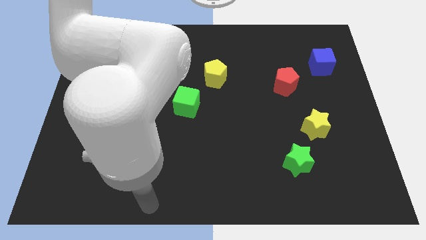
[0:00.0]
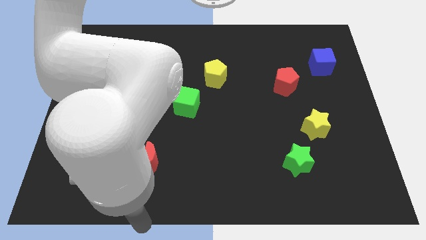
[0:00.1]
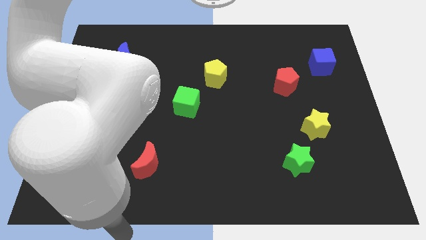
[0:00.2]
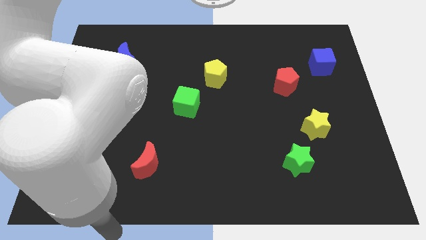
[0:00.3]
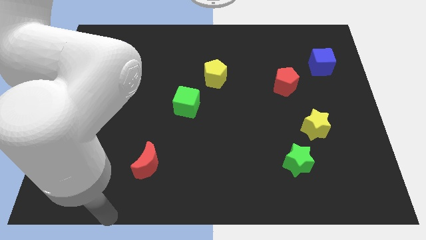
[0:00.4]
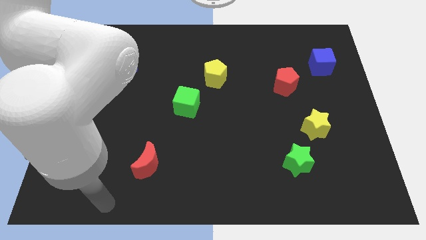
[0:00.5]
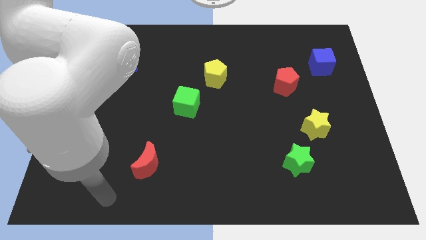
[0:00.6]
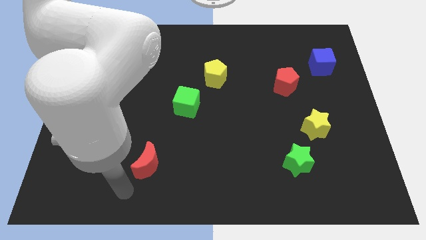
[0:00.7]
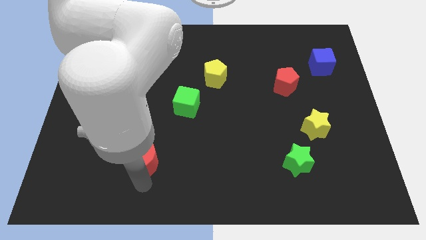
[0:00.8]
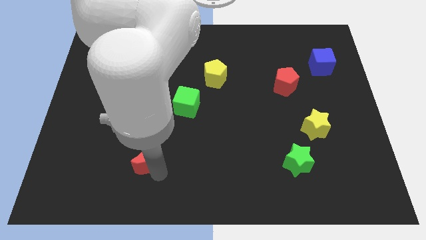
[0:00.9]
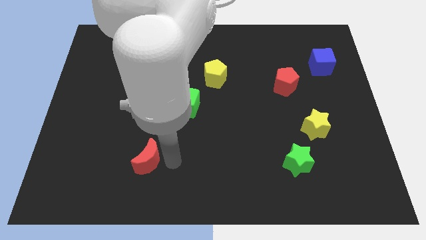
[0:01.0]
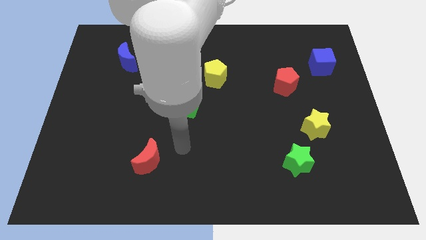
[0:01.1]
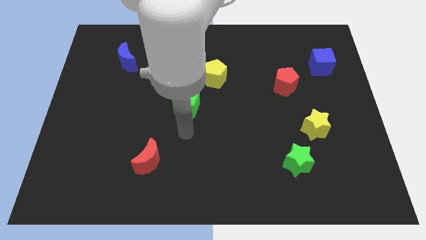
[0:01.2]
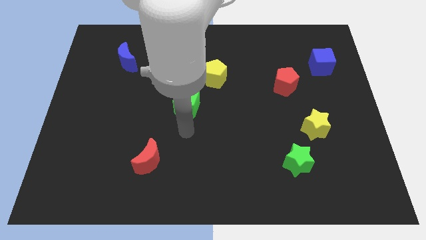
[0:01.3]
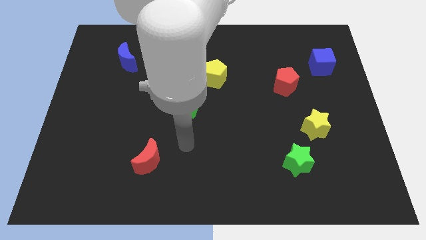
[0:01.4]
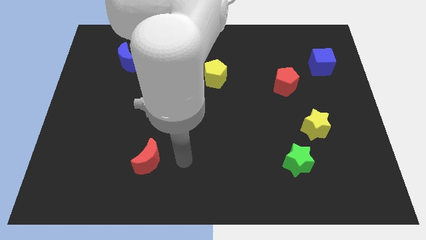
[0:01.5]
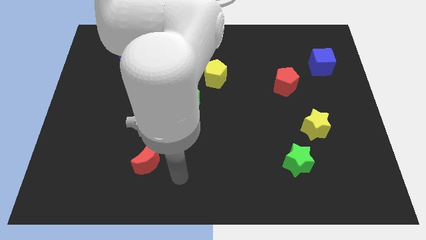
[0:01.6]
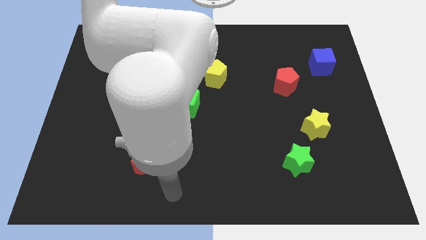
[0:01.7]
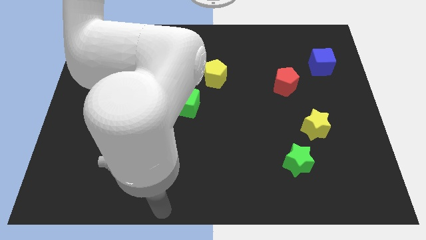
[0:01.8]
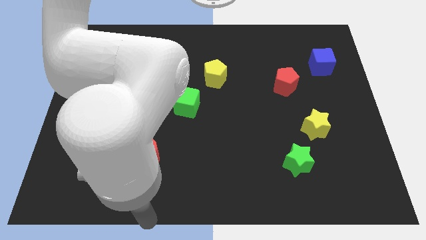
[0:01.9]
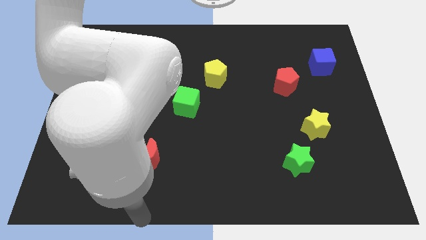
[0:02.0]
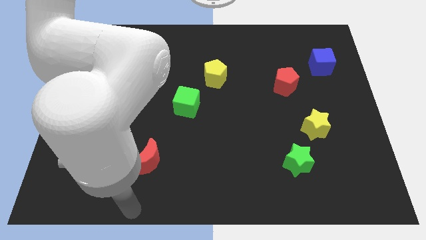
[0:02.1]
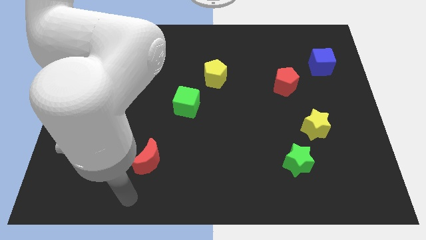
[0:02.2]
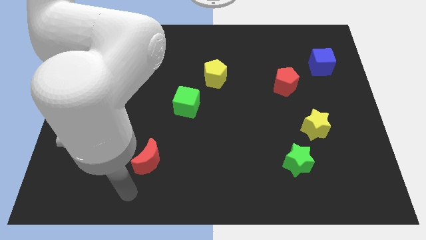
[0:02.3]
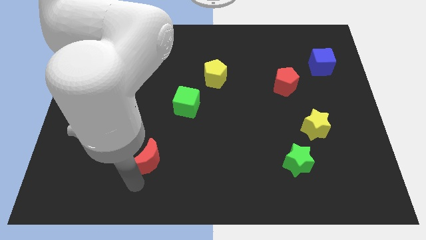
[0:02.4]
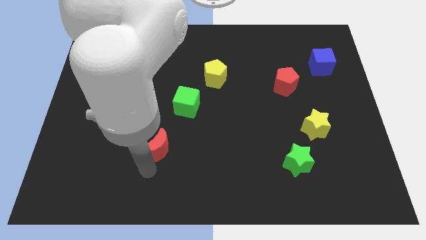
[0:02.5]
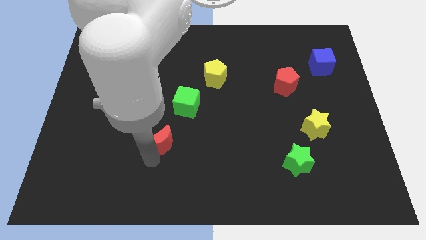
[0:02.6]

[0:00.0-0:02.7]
push the red moon towards the green cube

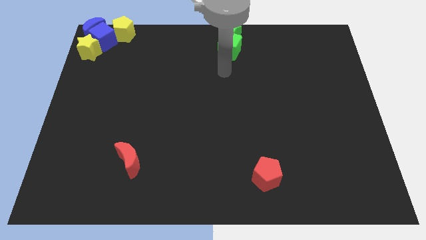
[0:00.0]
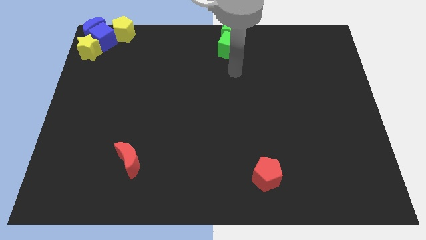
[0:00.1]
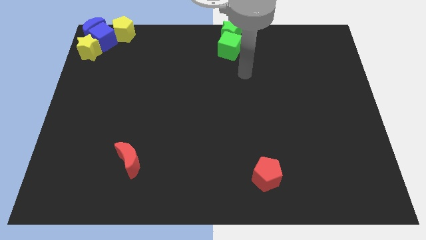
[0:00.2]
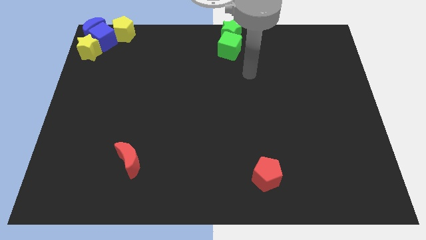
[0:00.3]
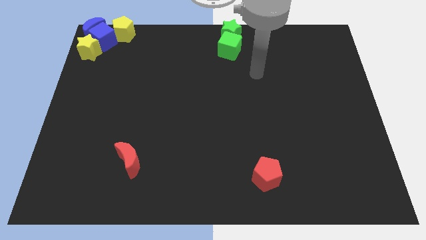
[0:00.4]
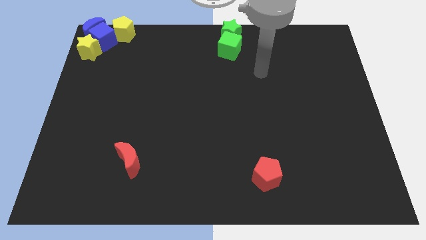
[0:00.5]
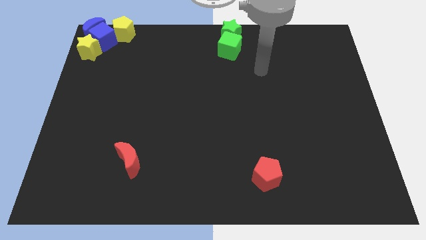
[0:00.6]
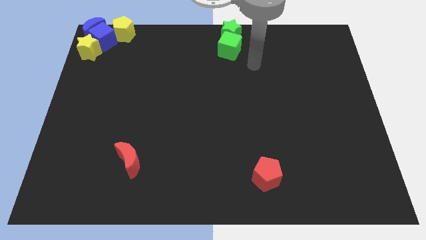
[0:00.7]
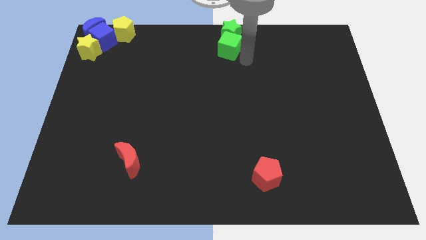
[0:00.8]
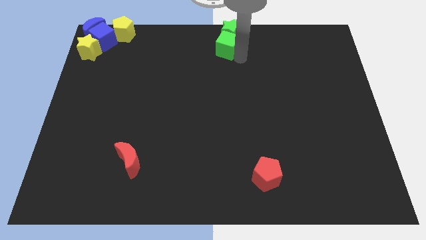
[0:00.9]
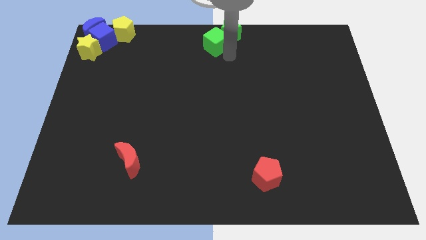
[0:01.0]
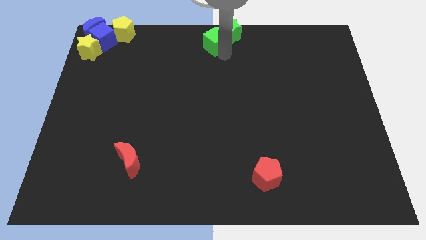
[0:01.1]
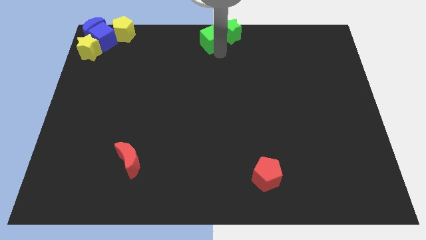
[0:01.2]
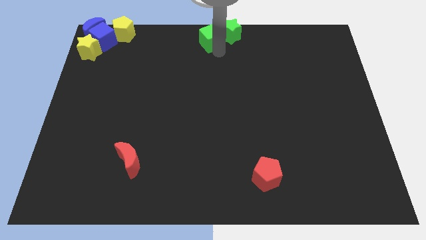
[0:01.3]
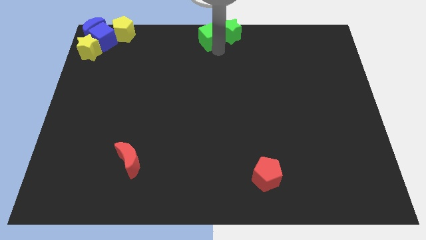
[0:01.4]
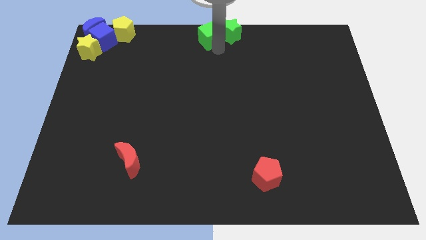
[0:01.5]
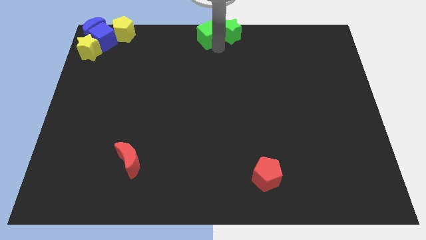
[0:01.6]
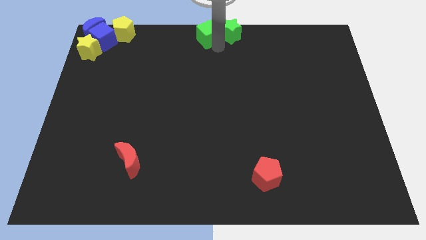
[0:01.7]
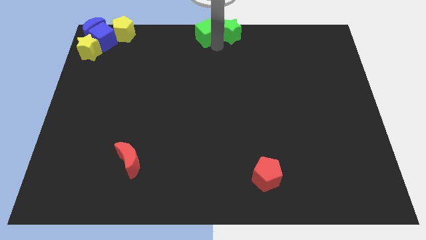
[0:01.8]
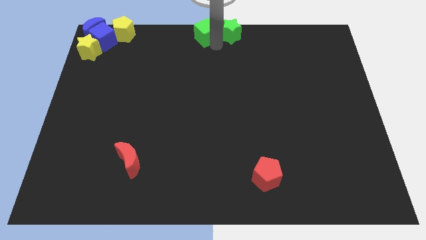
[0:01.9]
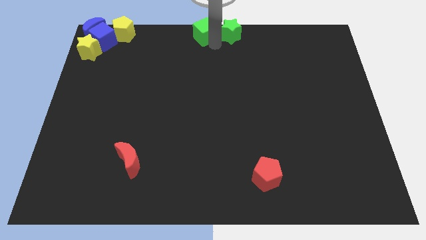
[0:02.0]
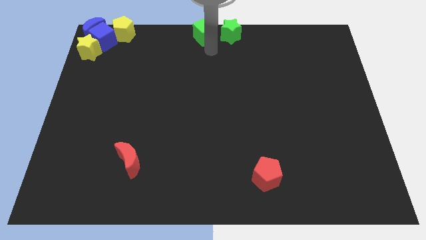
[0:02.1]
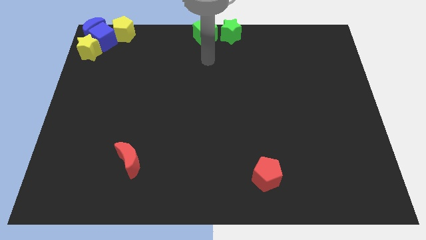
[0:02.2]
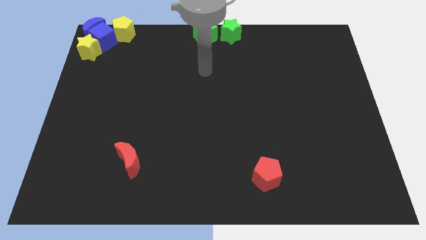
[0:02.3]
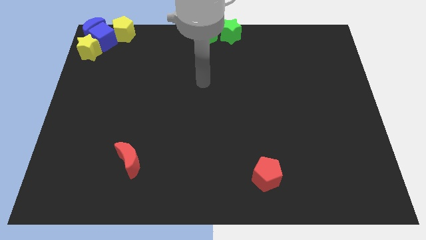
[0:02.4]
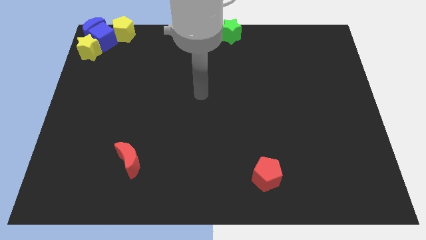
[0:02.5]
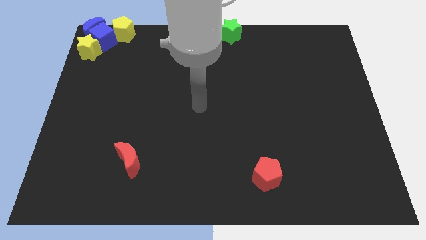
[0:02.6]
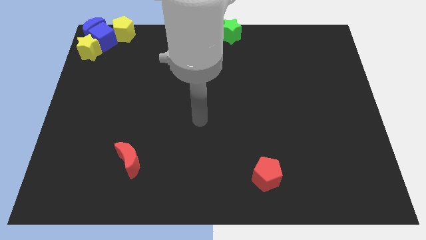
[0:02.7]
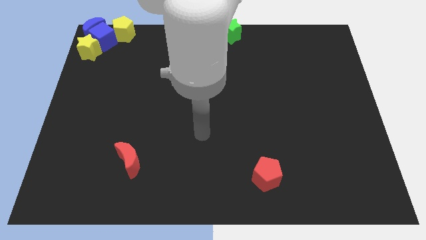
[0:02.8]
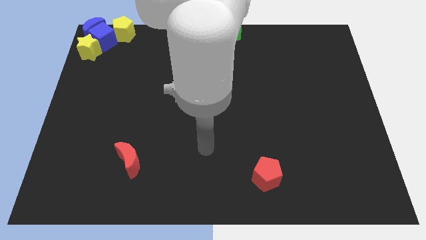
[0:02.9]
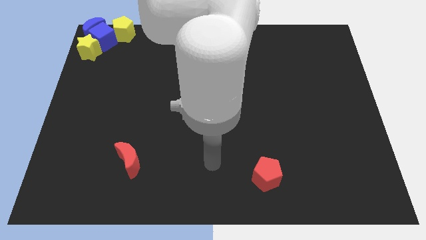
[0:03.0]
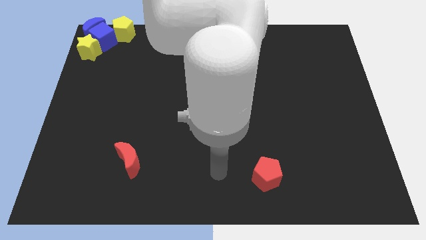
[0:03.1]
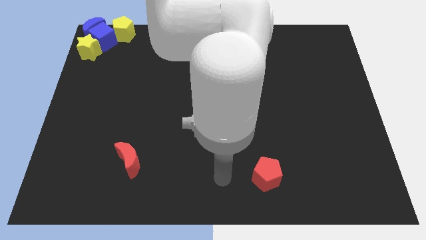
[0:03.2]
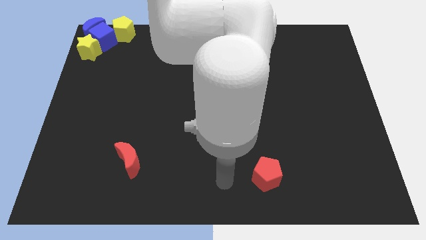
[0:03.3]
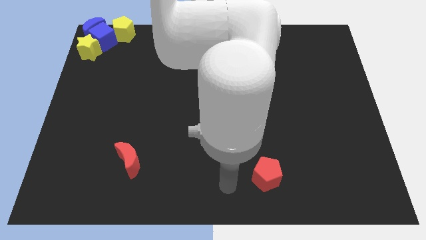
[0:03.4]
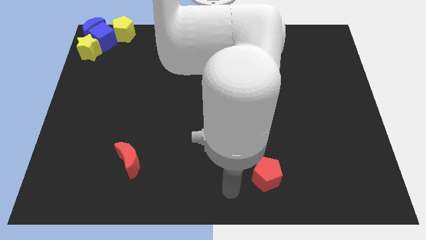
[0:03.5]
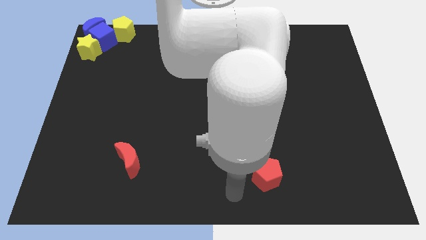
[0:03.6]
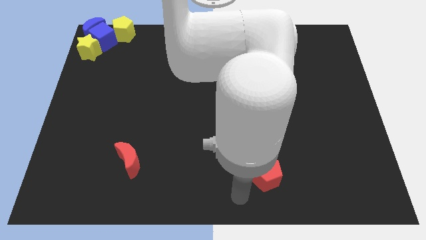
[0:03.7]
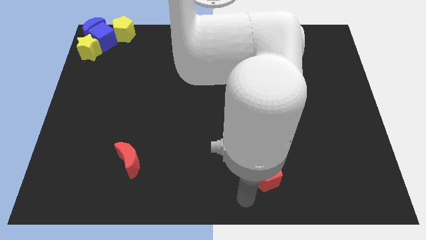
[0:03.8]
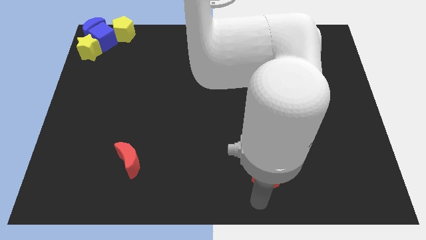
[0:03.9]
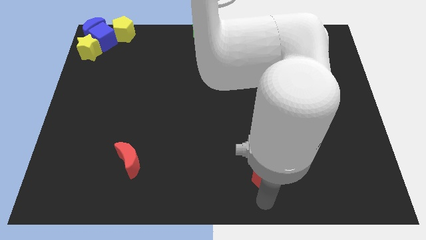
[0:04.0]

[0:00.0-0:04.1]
move green cube left beside the green star

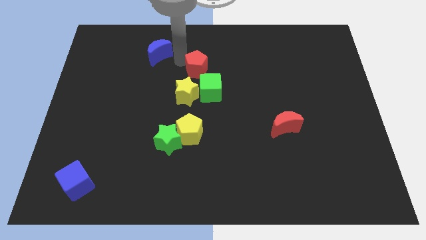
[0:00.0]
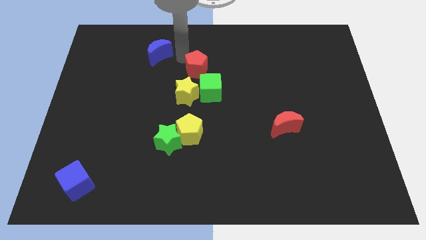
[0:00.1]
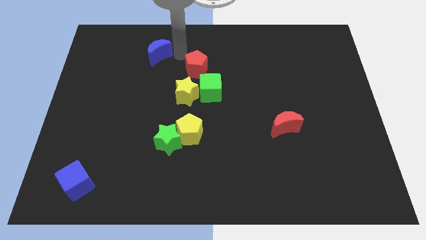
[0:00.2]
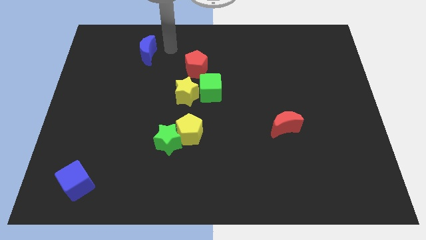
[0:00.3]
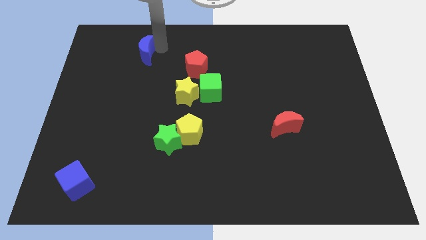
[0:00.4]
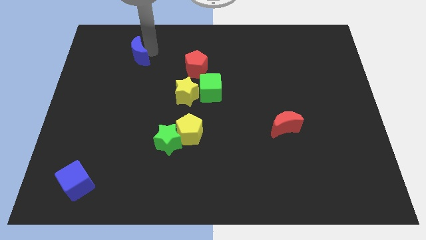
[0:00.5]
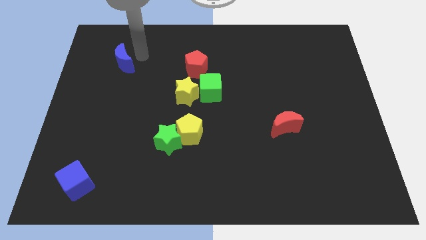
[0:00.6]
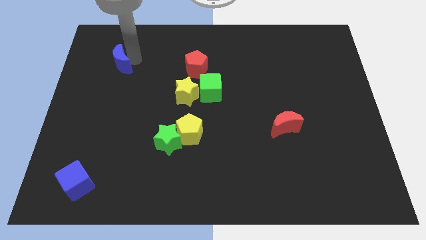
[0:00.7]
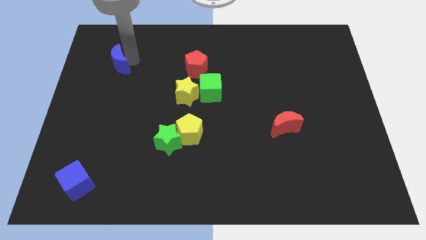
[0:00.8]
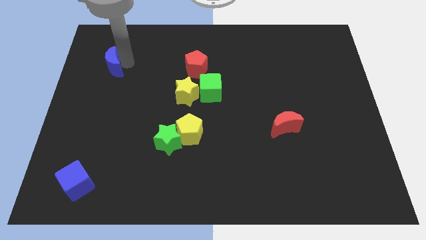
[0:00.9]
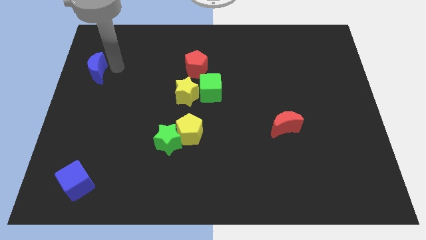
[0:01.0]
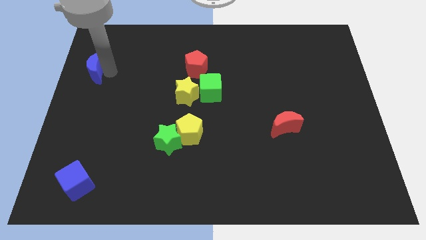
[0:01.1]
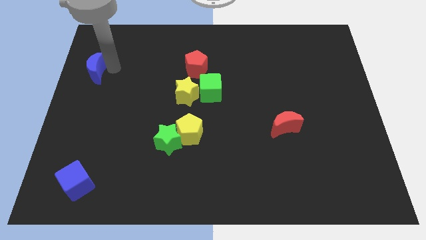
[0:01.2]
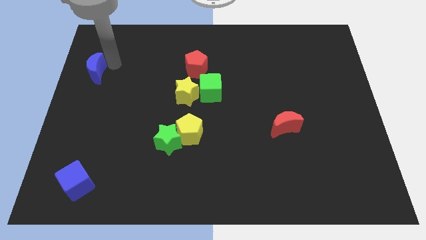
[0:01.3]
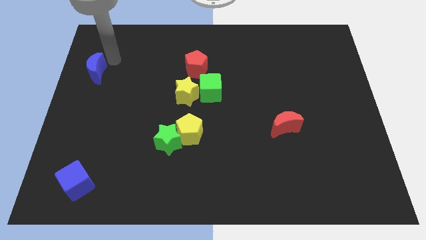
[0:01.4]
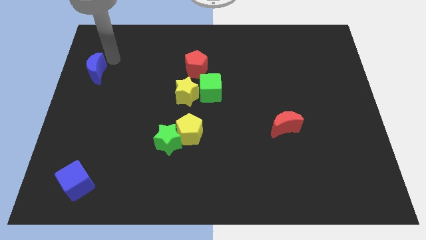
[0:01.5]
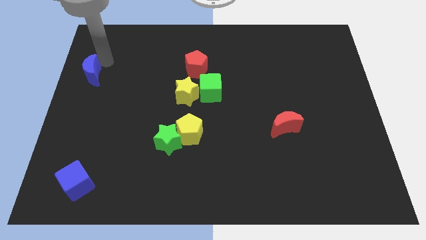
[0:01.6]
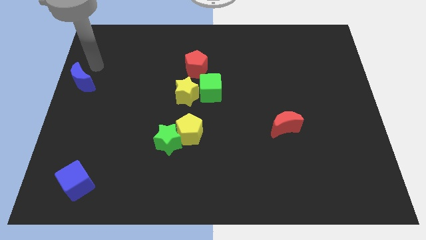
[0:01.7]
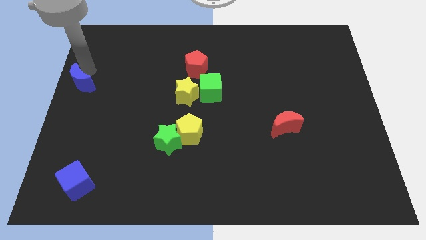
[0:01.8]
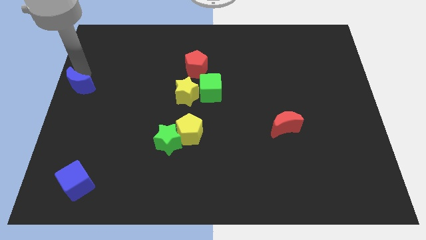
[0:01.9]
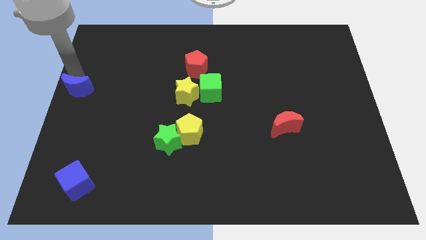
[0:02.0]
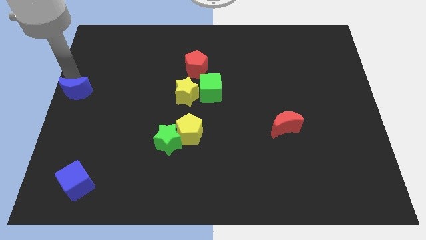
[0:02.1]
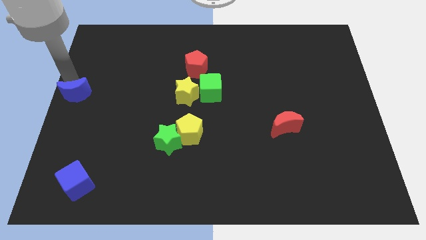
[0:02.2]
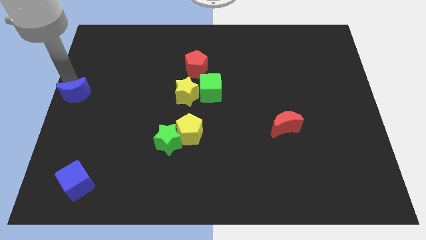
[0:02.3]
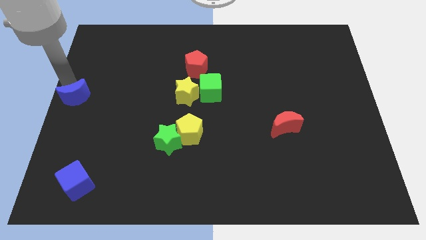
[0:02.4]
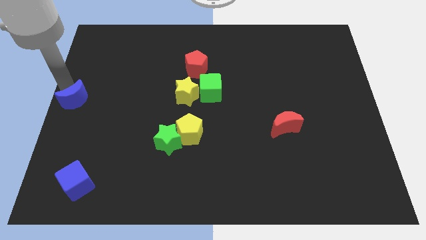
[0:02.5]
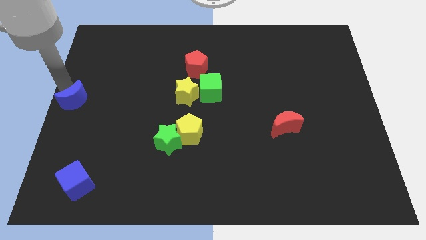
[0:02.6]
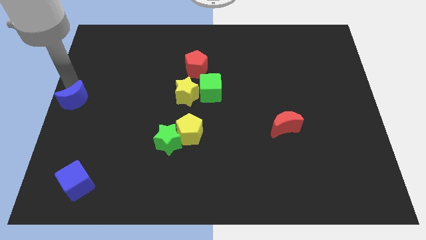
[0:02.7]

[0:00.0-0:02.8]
push the blue crescent to the center left of the board
